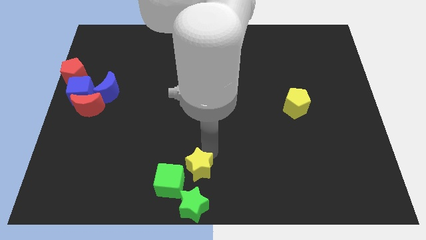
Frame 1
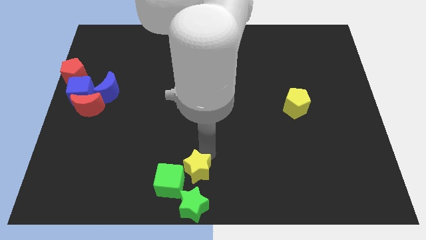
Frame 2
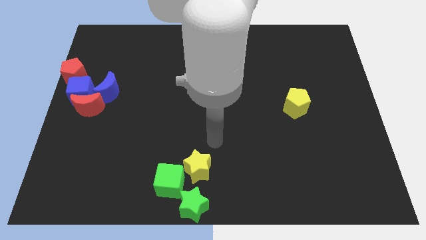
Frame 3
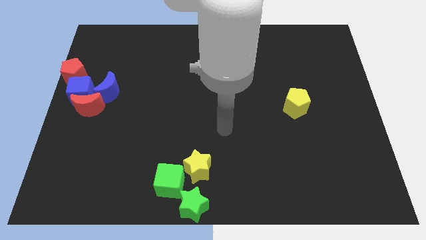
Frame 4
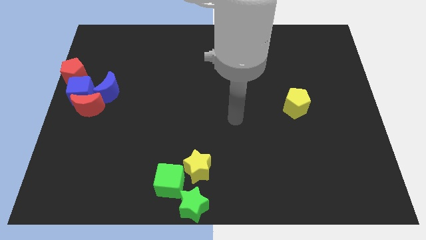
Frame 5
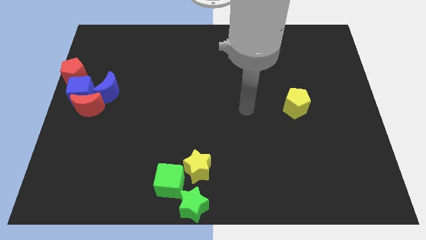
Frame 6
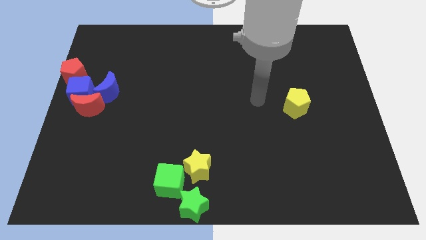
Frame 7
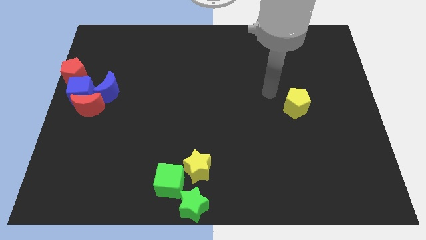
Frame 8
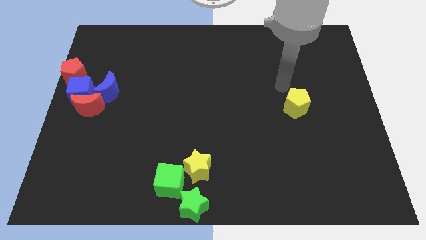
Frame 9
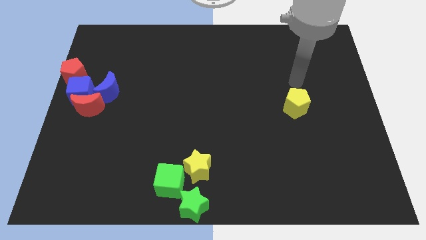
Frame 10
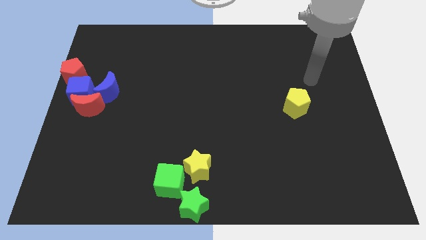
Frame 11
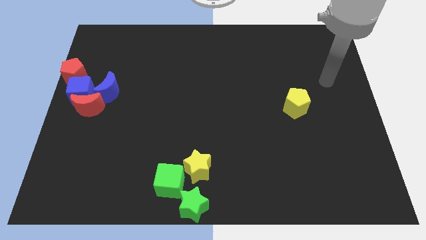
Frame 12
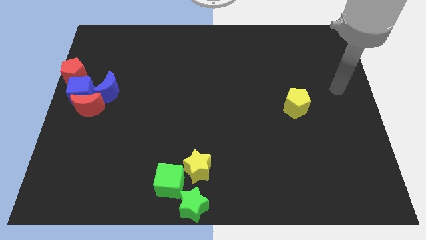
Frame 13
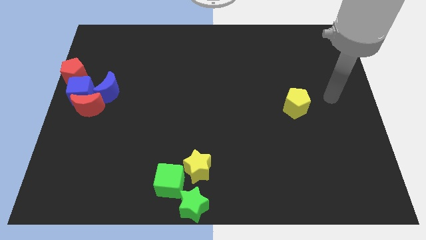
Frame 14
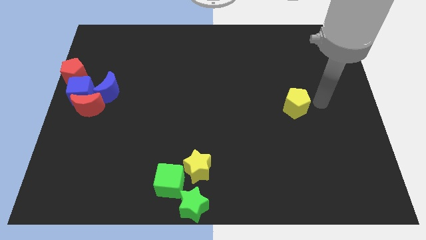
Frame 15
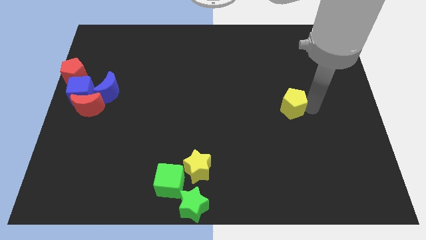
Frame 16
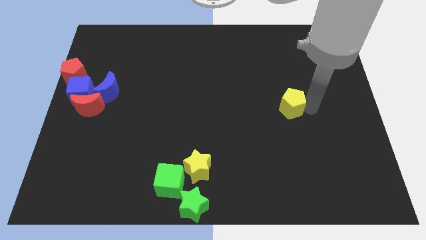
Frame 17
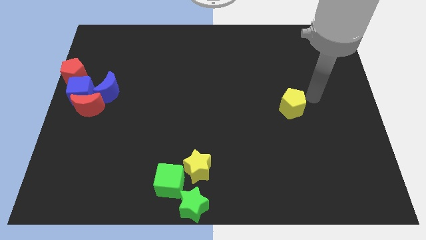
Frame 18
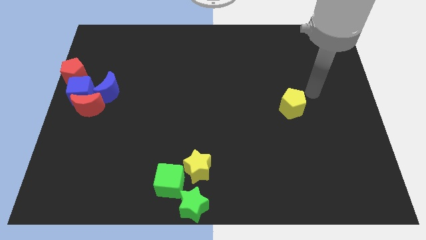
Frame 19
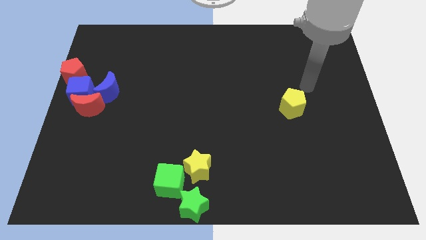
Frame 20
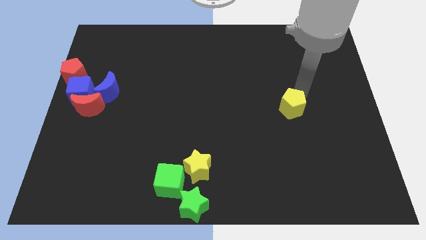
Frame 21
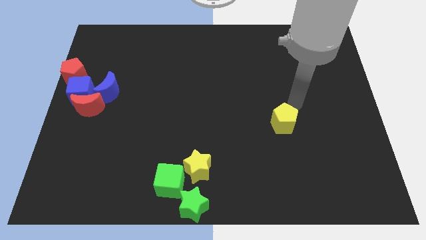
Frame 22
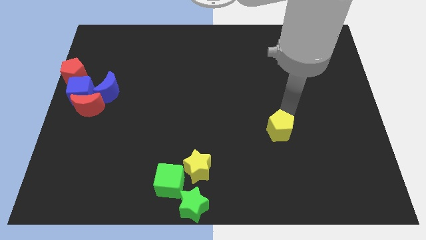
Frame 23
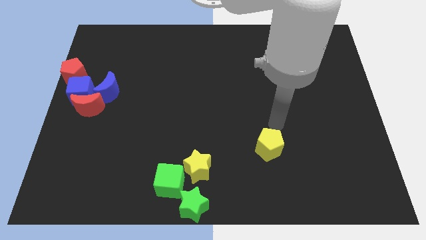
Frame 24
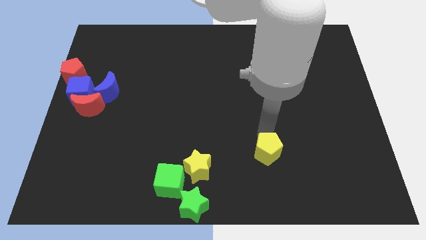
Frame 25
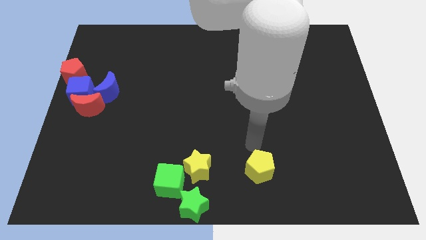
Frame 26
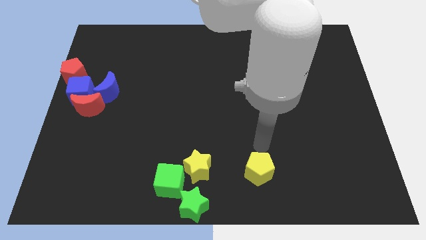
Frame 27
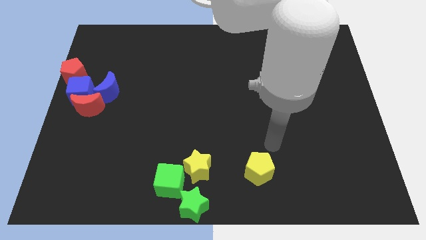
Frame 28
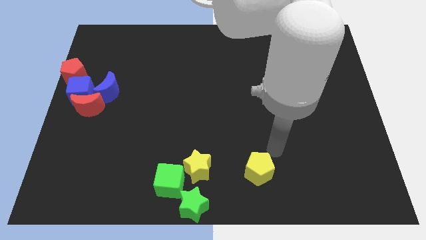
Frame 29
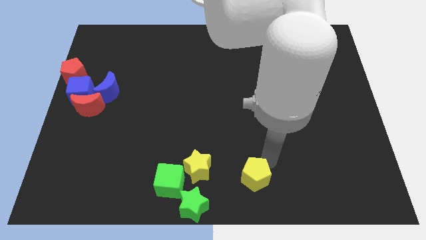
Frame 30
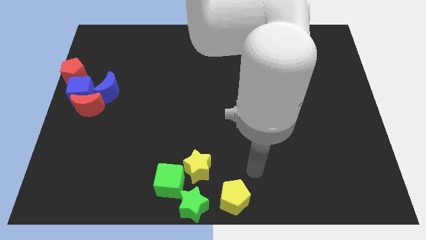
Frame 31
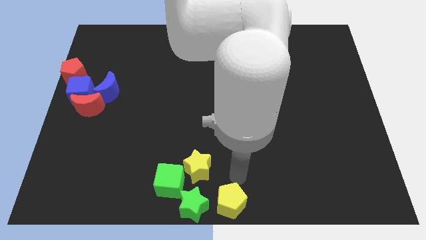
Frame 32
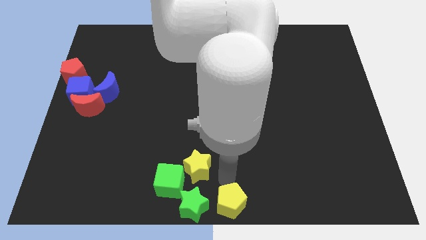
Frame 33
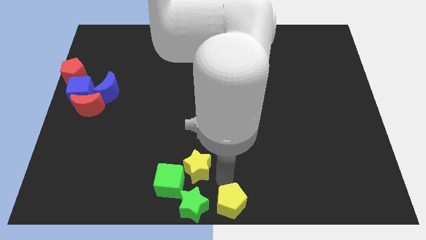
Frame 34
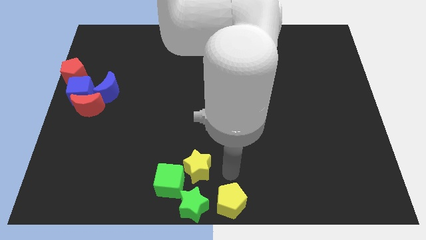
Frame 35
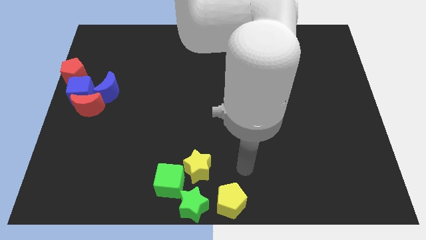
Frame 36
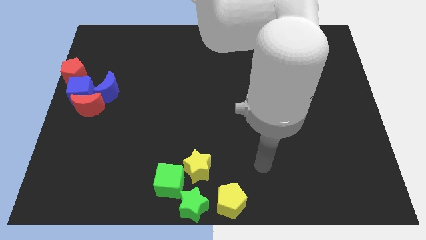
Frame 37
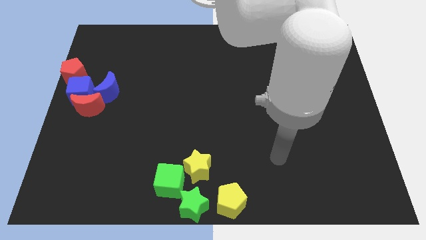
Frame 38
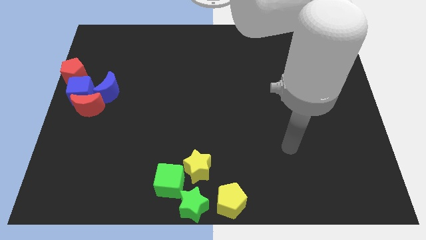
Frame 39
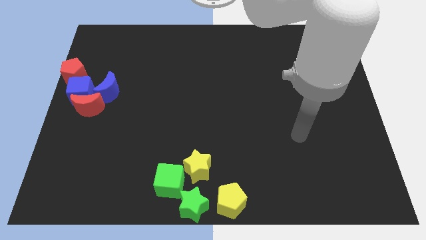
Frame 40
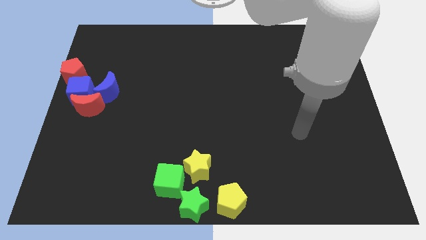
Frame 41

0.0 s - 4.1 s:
place the yellow pentagon at the bottom center of the board

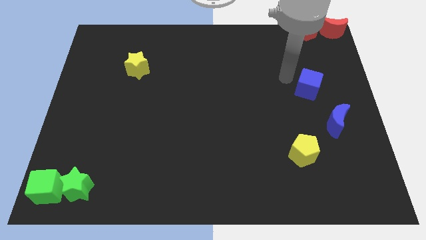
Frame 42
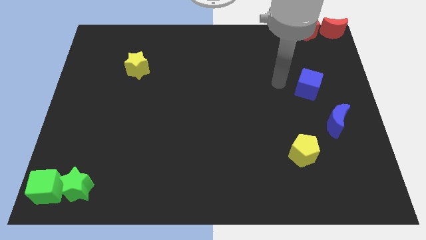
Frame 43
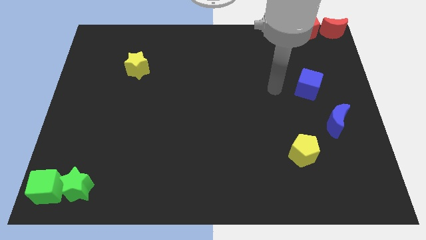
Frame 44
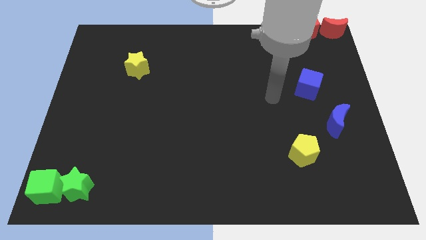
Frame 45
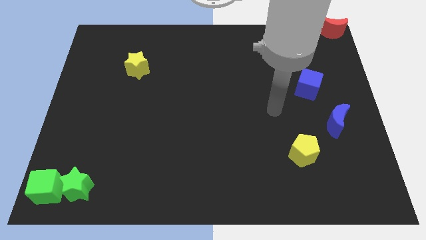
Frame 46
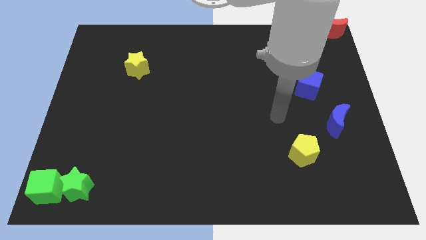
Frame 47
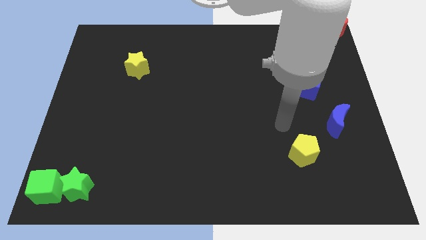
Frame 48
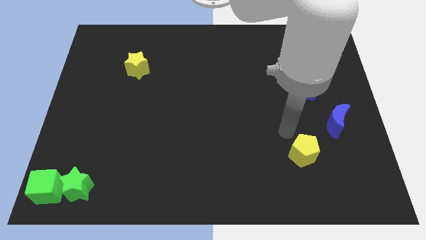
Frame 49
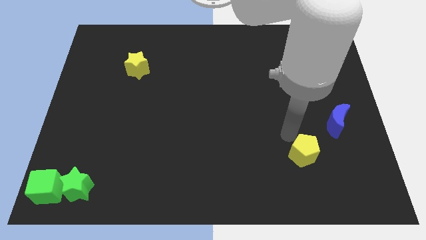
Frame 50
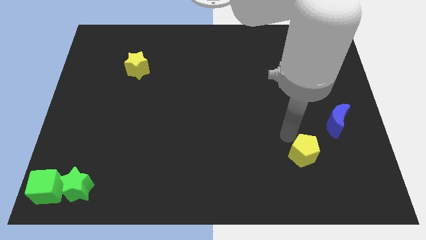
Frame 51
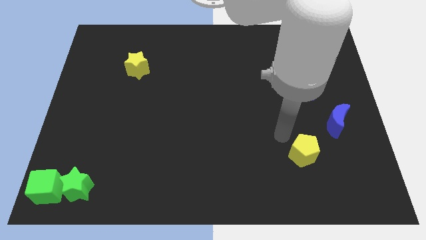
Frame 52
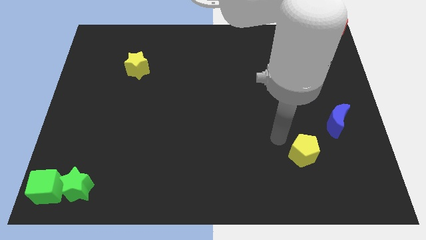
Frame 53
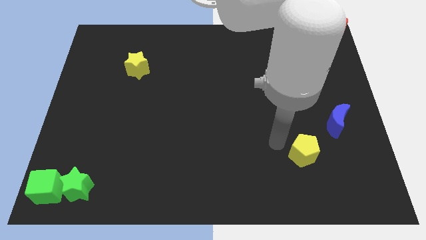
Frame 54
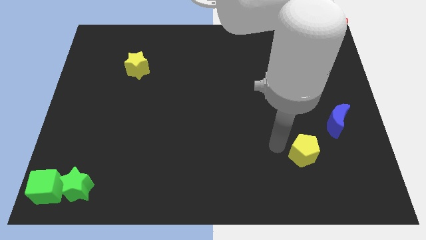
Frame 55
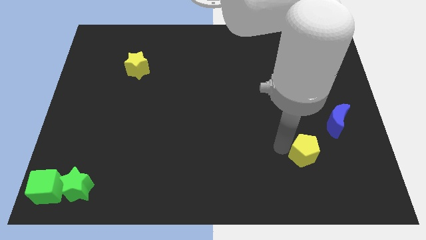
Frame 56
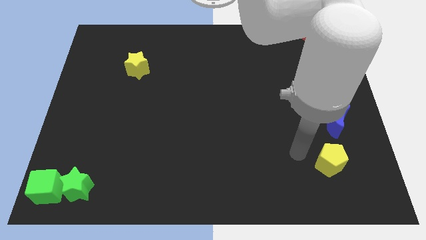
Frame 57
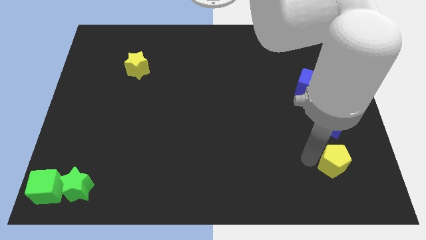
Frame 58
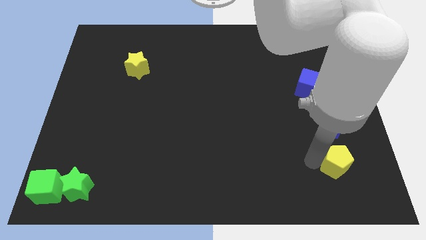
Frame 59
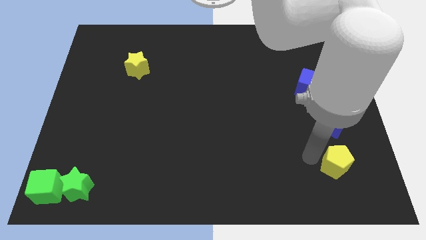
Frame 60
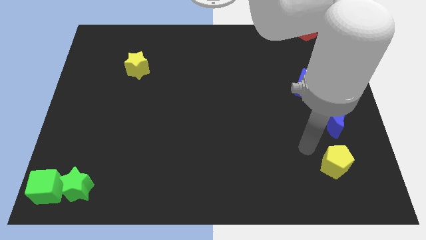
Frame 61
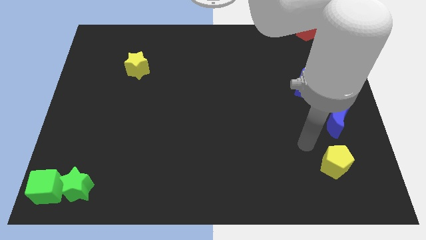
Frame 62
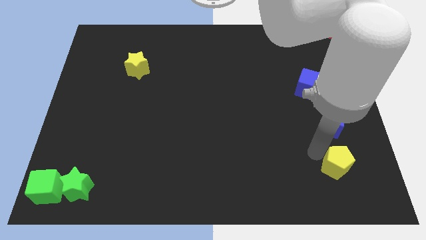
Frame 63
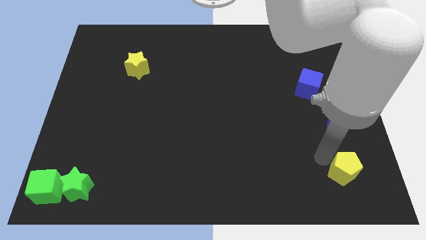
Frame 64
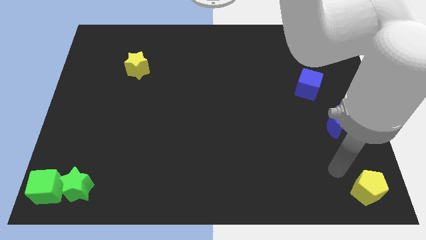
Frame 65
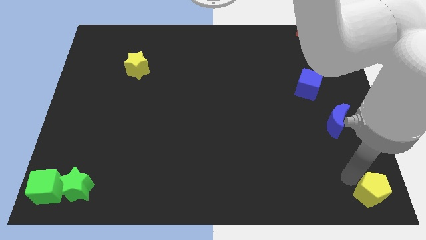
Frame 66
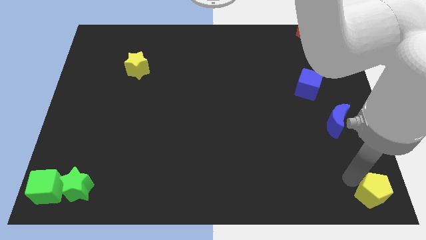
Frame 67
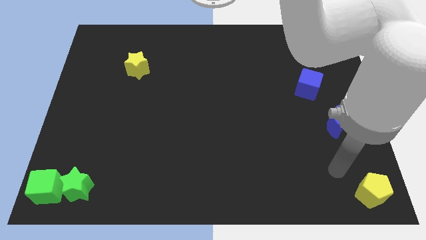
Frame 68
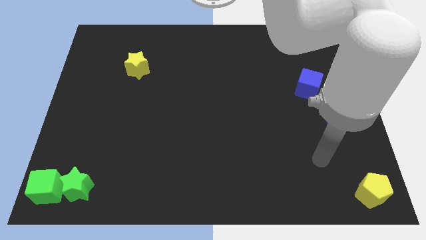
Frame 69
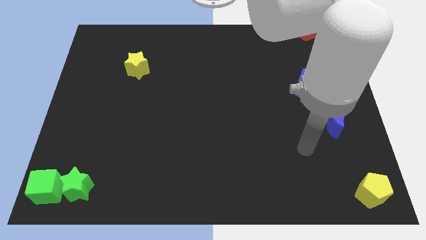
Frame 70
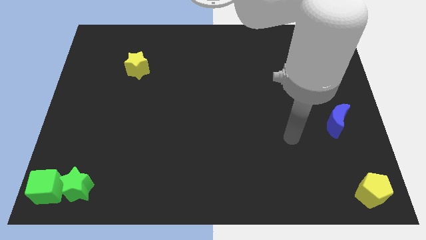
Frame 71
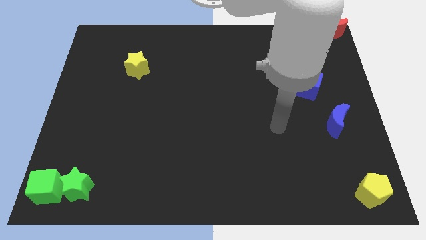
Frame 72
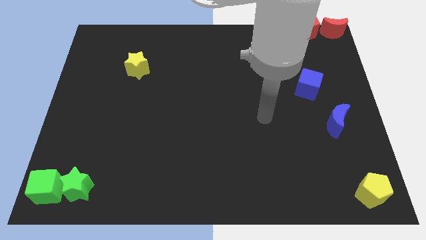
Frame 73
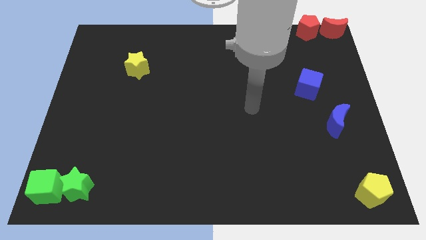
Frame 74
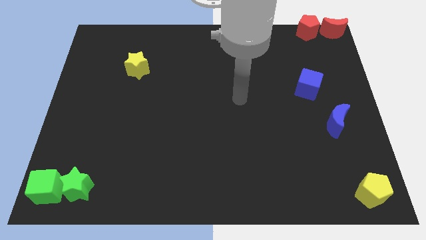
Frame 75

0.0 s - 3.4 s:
move the yellow pentagon to the bottom right of the board

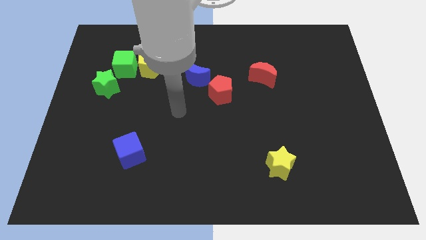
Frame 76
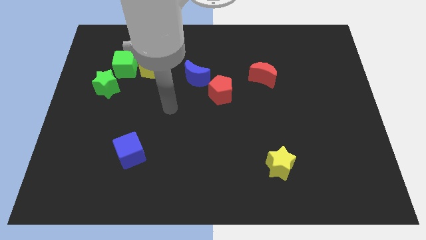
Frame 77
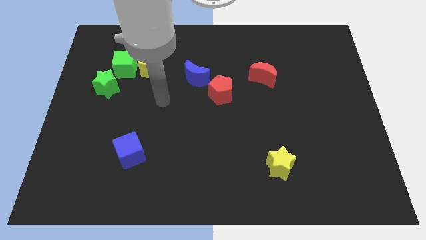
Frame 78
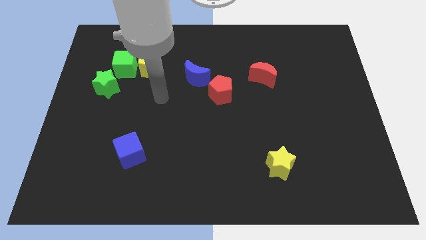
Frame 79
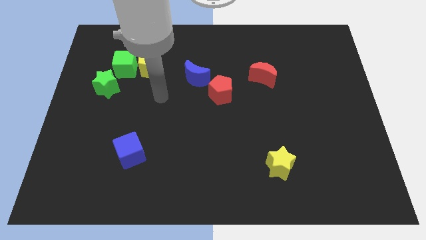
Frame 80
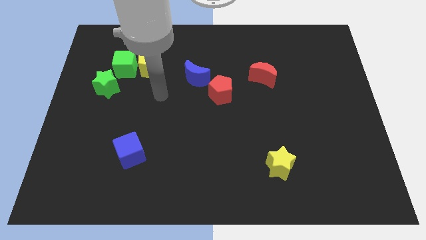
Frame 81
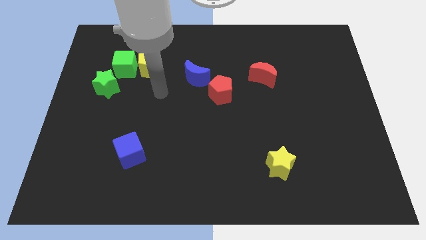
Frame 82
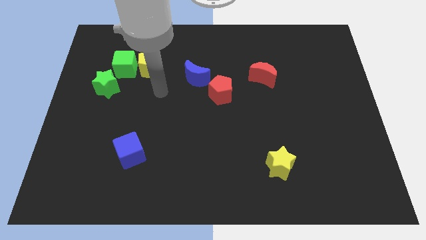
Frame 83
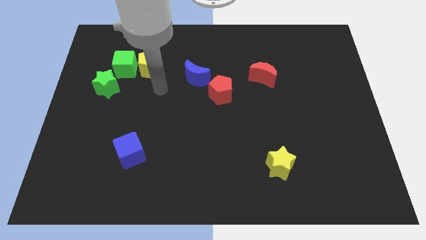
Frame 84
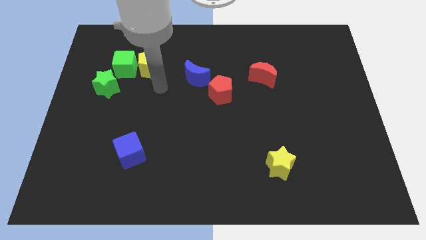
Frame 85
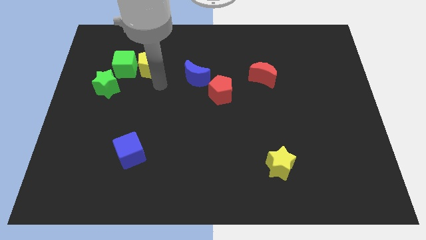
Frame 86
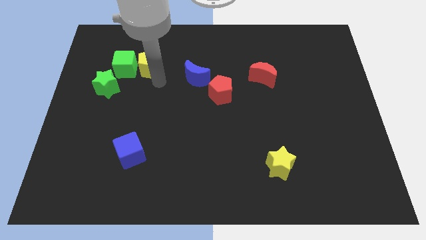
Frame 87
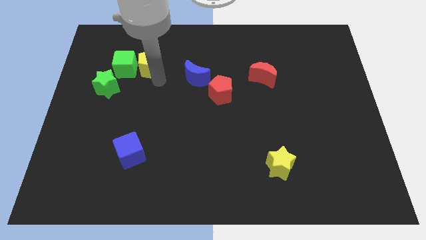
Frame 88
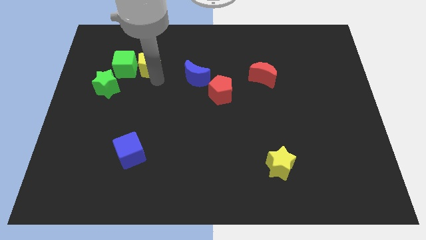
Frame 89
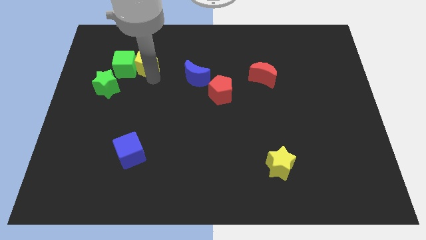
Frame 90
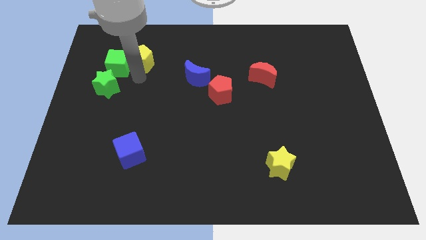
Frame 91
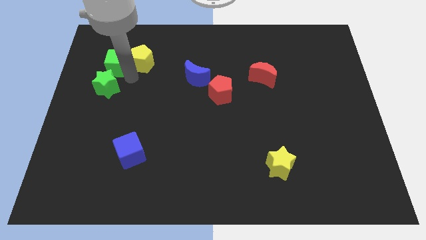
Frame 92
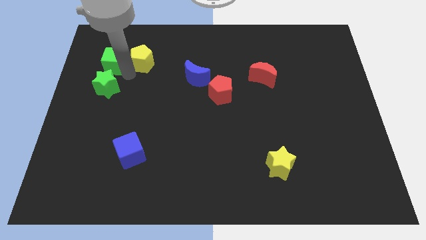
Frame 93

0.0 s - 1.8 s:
move the yellow pentagon into the green cube
